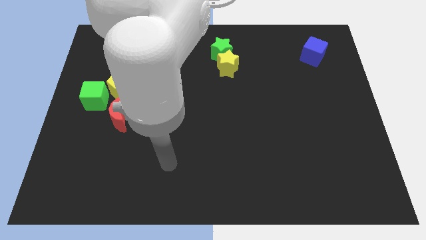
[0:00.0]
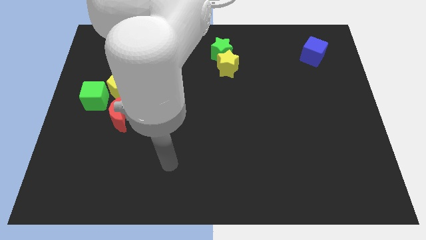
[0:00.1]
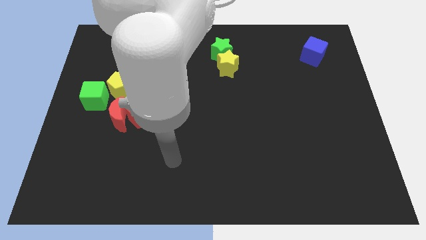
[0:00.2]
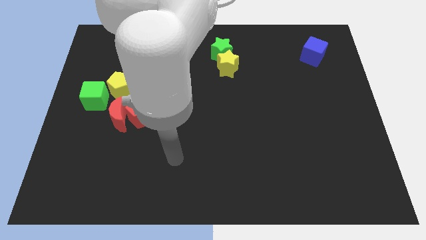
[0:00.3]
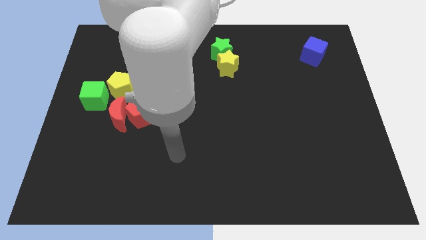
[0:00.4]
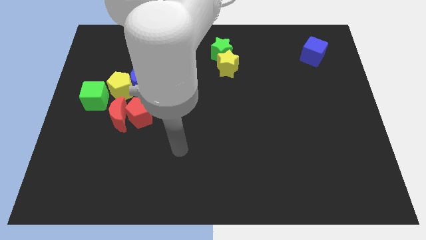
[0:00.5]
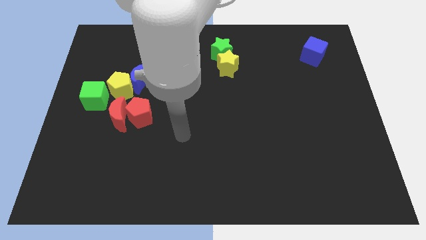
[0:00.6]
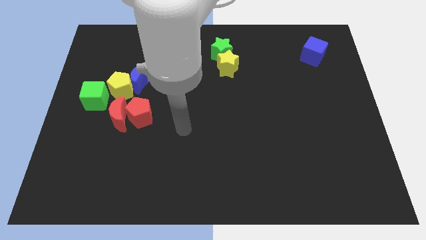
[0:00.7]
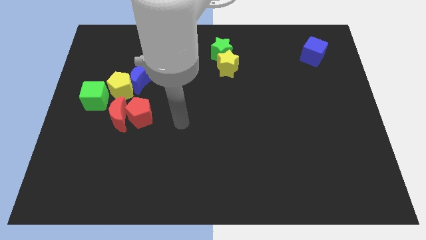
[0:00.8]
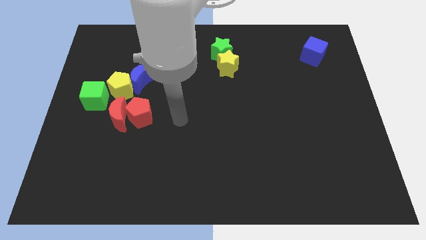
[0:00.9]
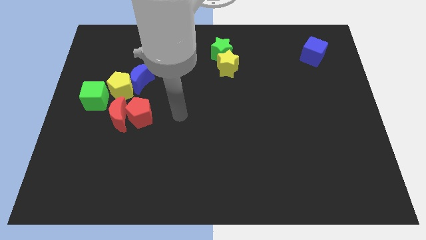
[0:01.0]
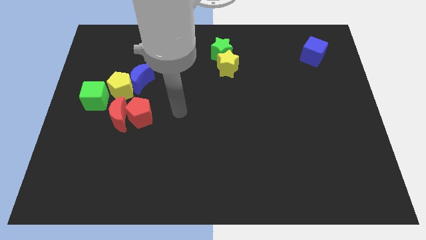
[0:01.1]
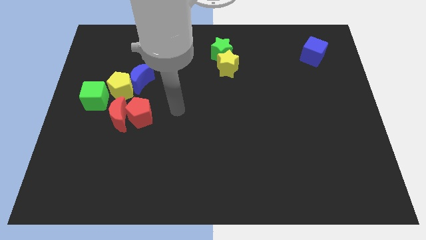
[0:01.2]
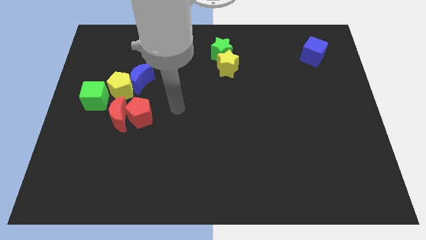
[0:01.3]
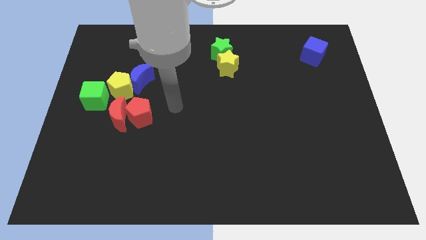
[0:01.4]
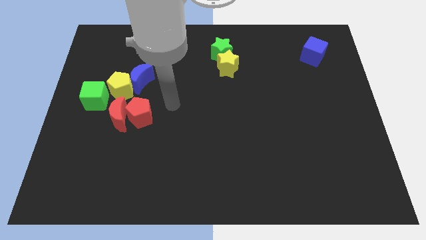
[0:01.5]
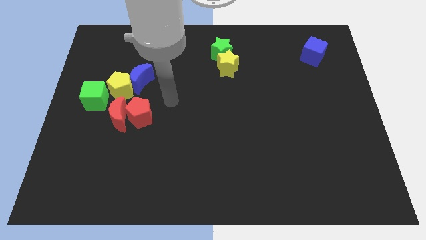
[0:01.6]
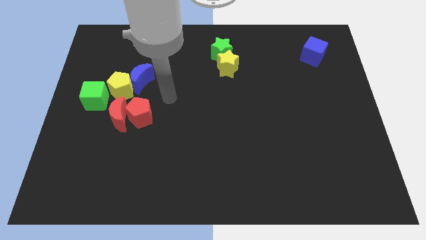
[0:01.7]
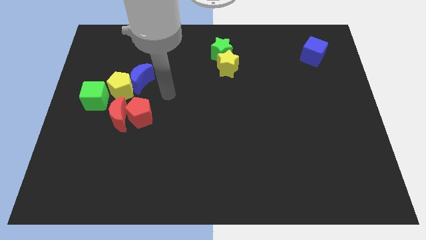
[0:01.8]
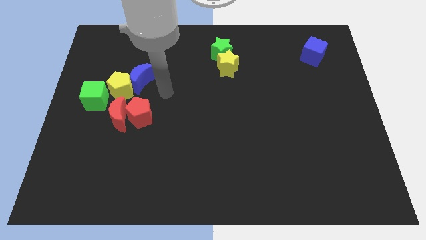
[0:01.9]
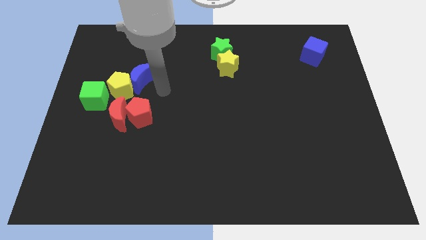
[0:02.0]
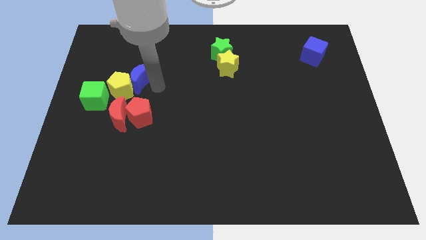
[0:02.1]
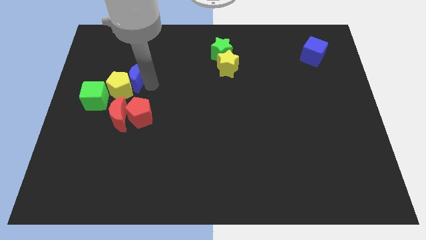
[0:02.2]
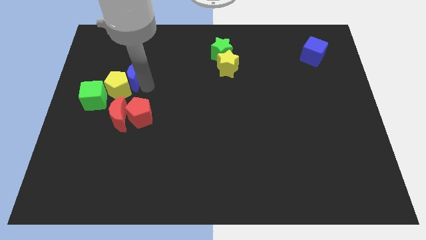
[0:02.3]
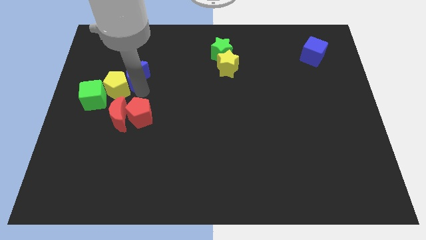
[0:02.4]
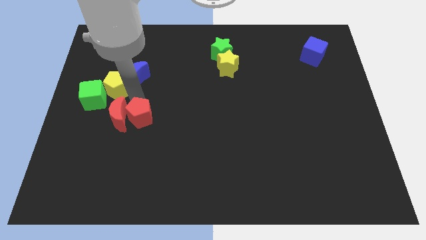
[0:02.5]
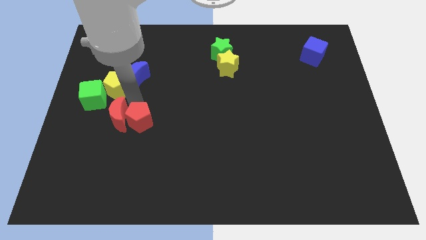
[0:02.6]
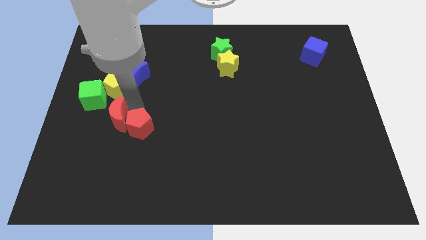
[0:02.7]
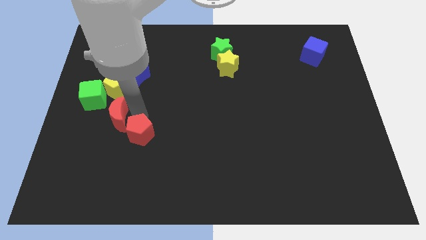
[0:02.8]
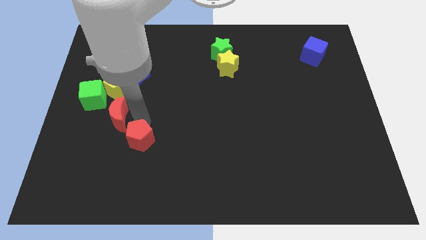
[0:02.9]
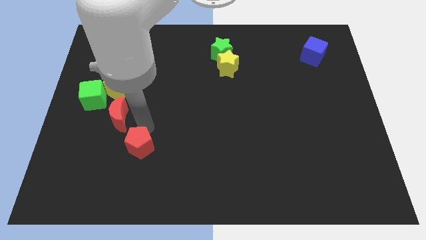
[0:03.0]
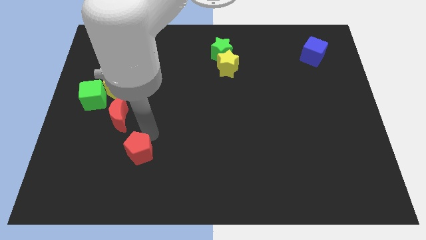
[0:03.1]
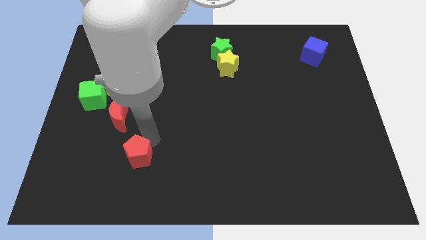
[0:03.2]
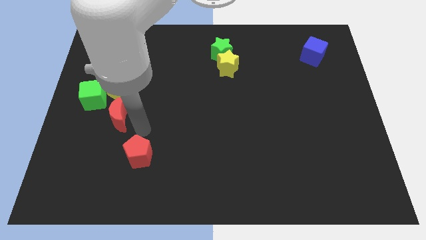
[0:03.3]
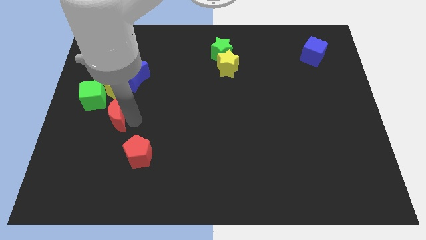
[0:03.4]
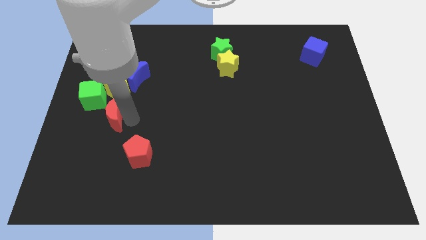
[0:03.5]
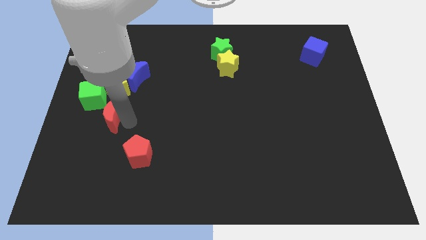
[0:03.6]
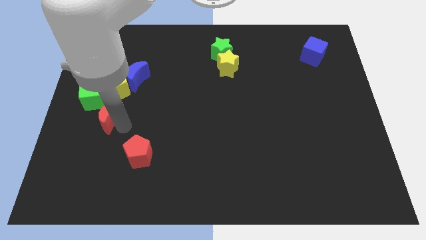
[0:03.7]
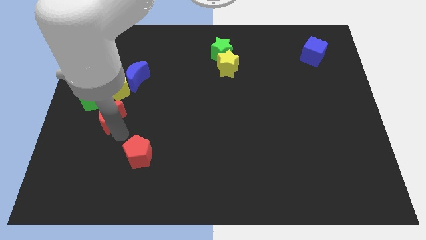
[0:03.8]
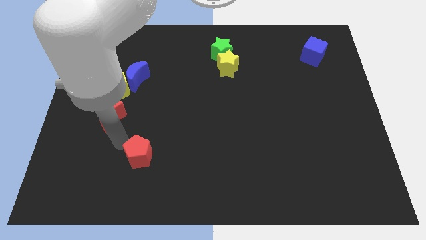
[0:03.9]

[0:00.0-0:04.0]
separate the red pentagon and red moon

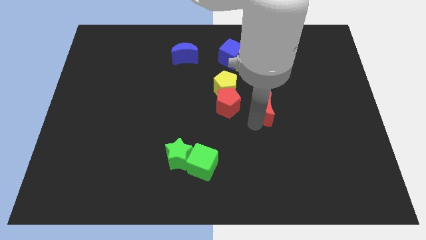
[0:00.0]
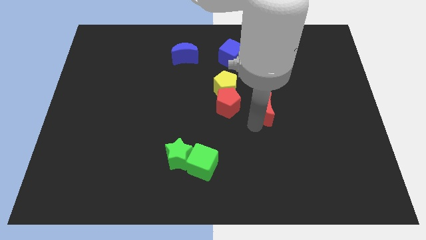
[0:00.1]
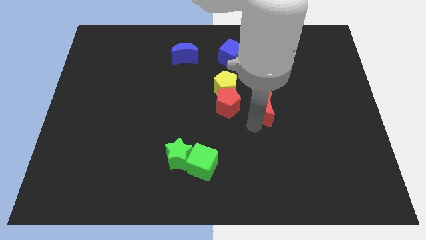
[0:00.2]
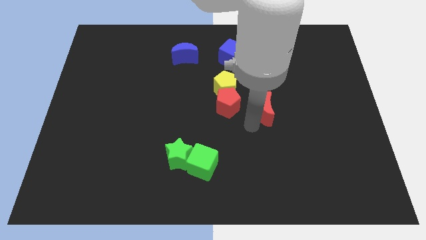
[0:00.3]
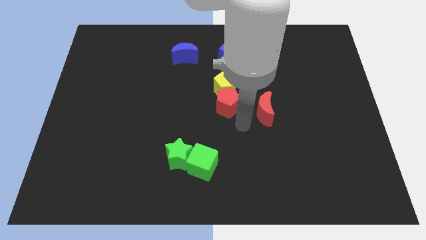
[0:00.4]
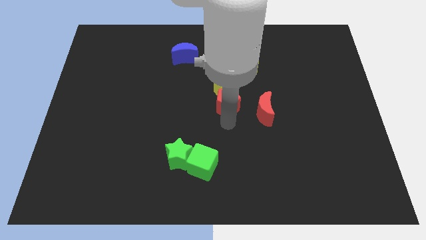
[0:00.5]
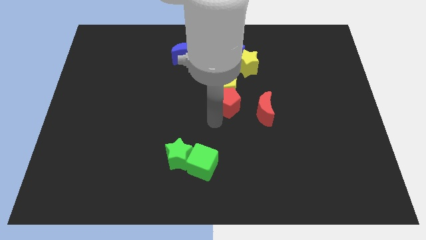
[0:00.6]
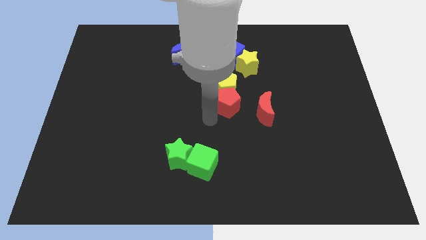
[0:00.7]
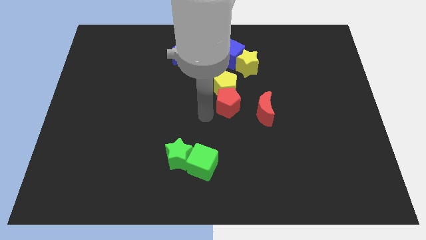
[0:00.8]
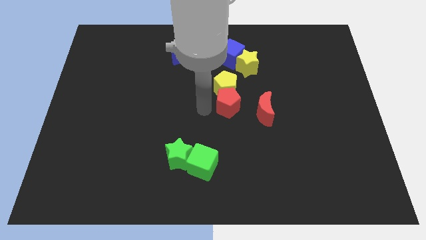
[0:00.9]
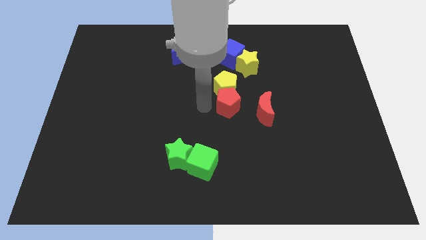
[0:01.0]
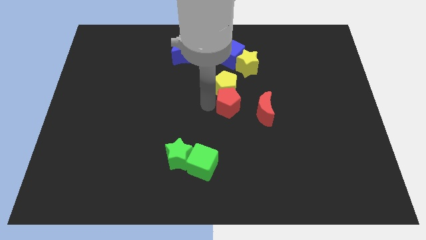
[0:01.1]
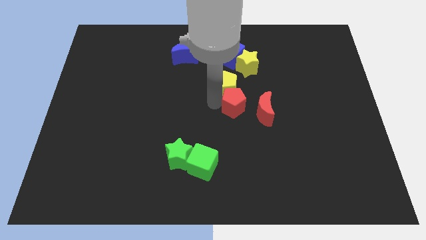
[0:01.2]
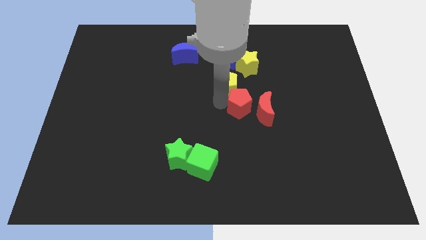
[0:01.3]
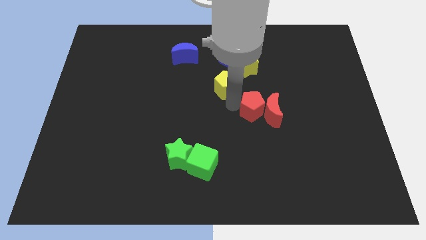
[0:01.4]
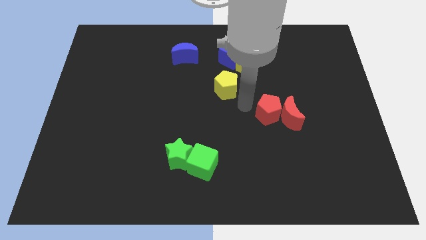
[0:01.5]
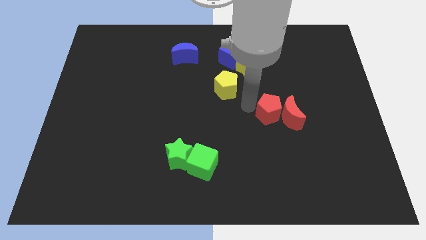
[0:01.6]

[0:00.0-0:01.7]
move the red pentagon into the red moon

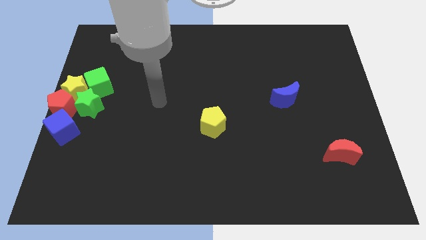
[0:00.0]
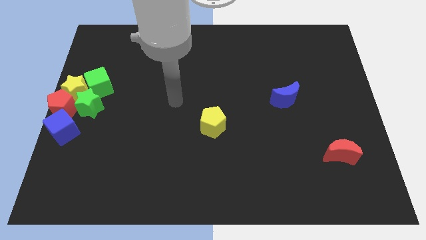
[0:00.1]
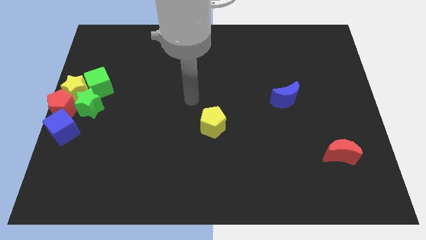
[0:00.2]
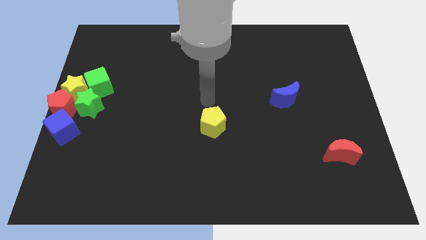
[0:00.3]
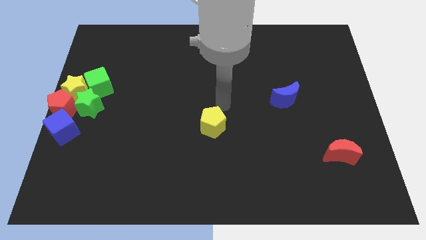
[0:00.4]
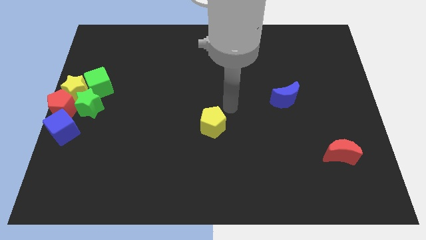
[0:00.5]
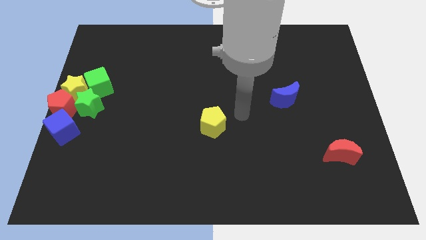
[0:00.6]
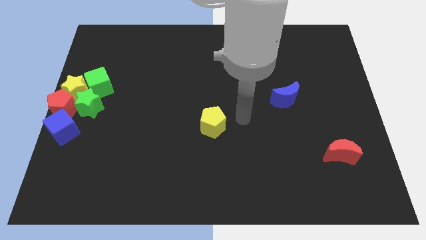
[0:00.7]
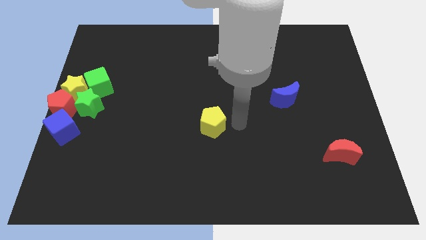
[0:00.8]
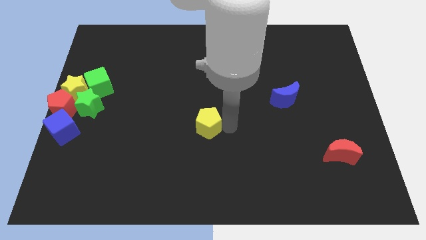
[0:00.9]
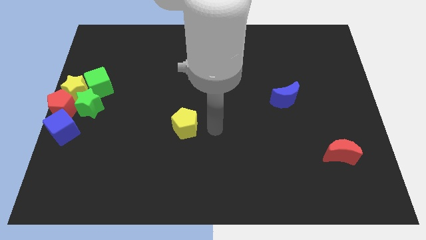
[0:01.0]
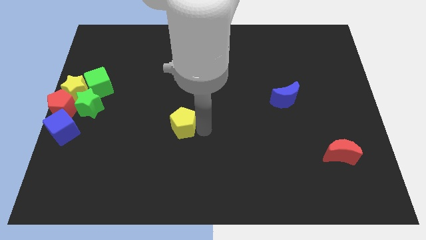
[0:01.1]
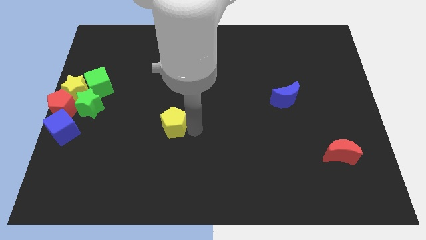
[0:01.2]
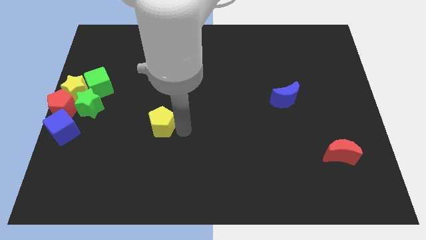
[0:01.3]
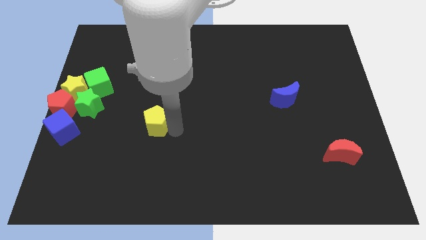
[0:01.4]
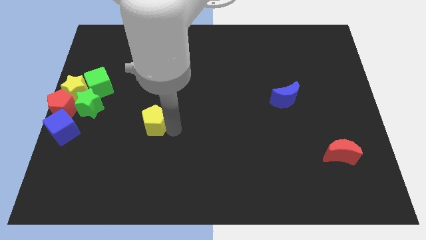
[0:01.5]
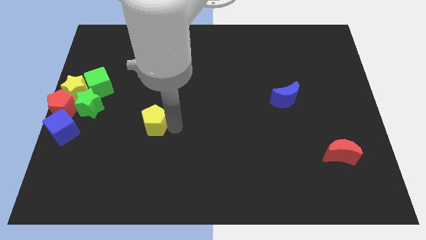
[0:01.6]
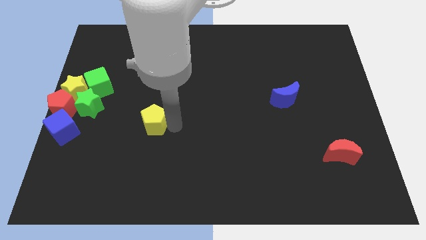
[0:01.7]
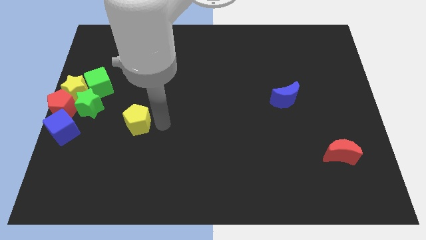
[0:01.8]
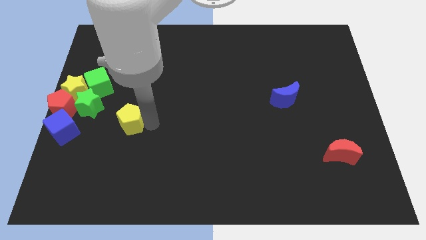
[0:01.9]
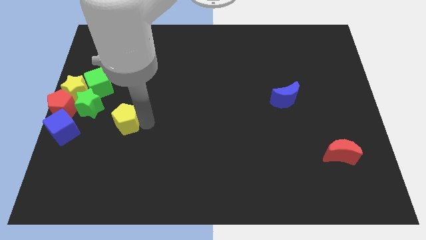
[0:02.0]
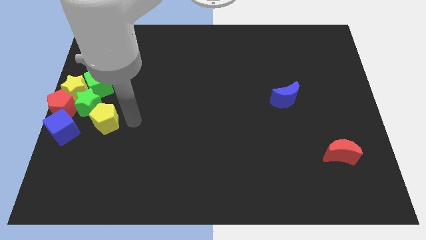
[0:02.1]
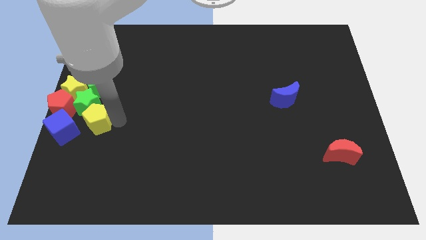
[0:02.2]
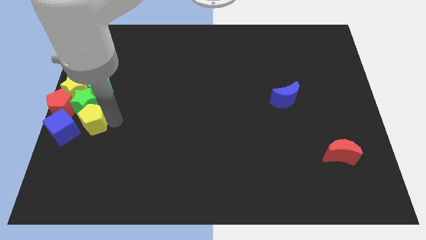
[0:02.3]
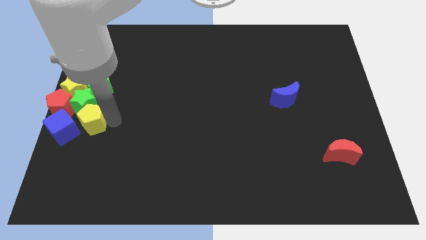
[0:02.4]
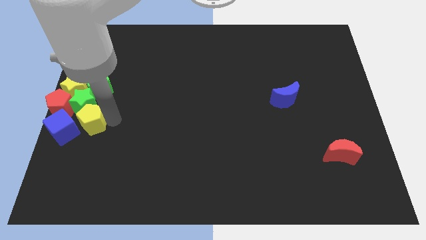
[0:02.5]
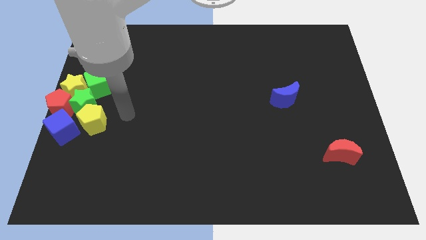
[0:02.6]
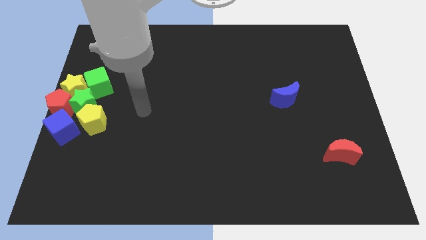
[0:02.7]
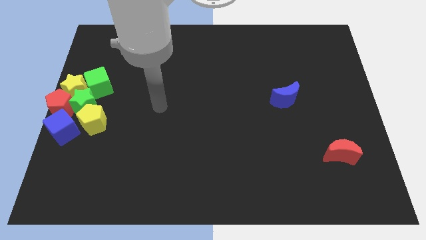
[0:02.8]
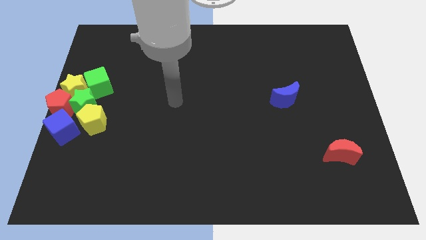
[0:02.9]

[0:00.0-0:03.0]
move the yellow pentagon into the green star

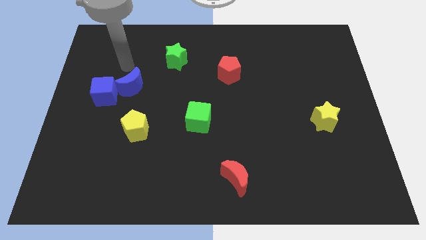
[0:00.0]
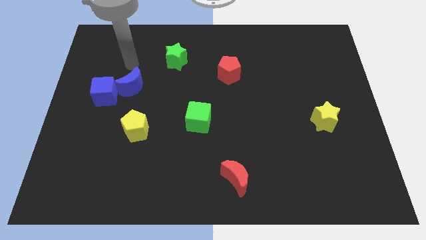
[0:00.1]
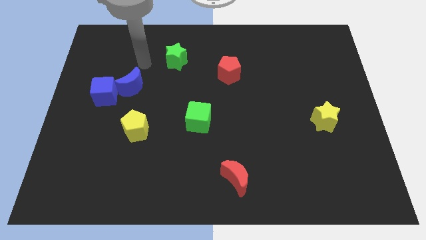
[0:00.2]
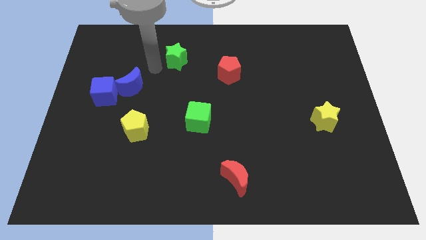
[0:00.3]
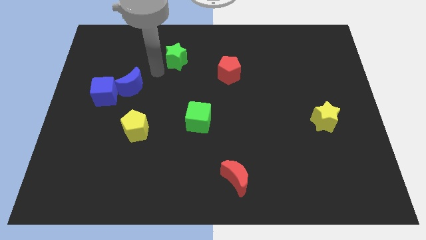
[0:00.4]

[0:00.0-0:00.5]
move your arm towards the green star
